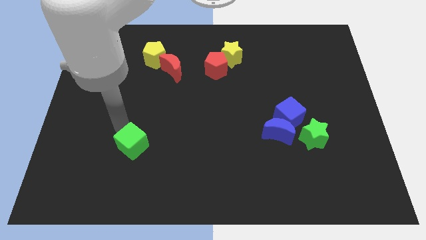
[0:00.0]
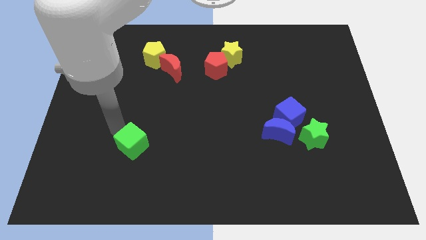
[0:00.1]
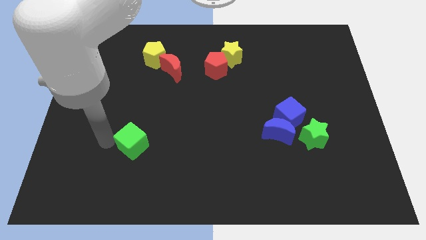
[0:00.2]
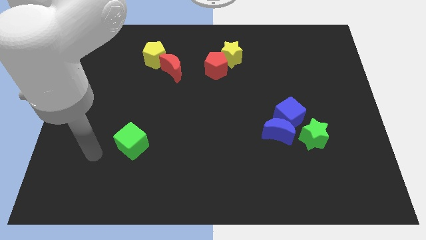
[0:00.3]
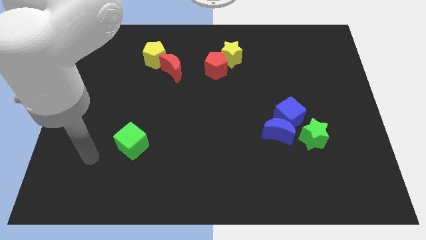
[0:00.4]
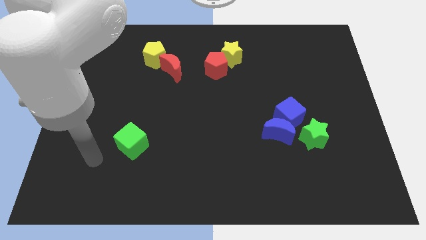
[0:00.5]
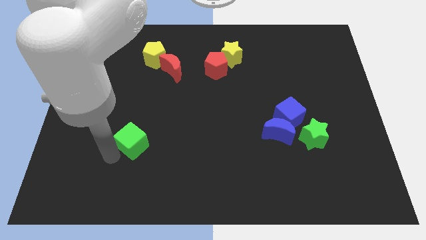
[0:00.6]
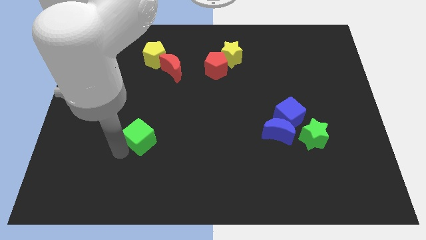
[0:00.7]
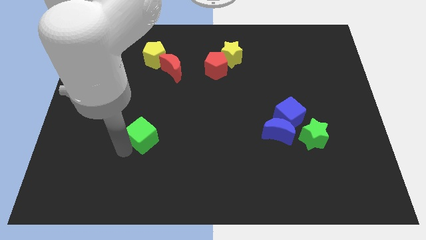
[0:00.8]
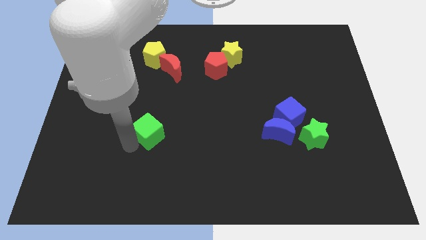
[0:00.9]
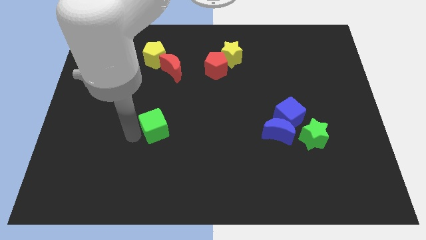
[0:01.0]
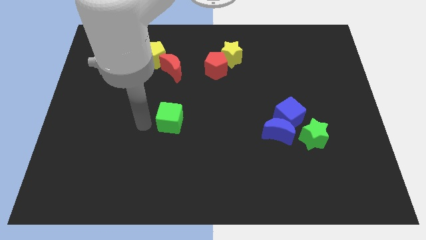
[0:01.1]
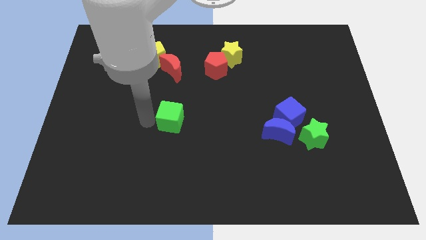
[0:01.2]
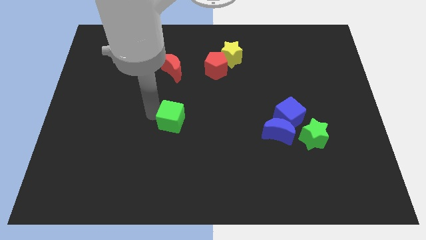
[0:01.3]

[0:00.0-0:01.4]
push the green cube towards the center of the board

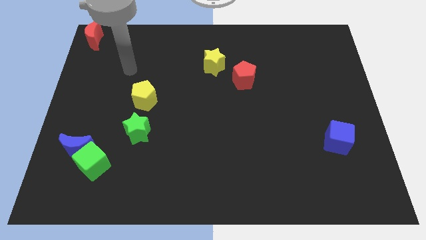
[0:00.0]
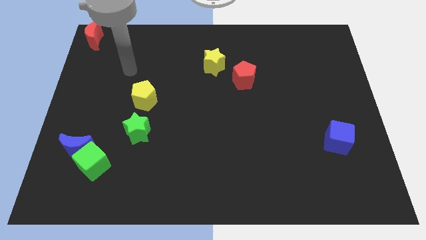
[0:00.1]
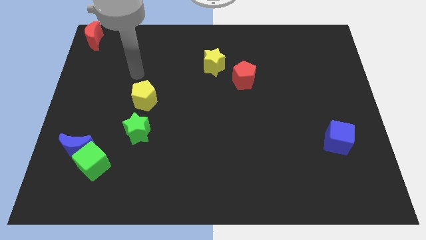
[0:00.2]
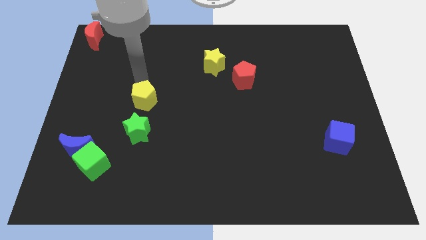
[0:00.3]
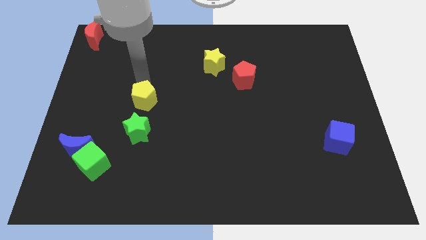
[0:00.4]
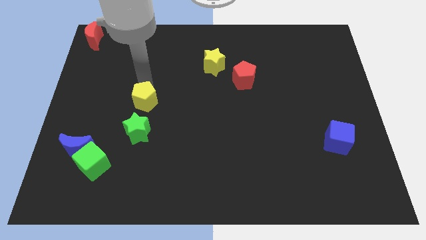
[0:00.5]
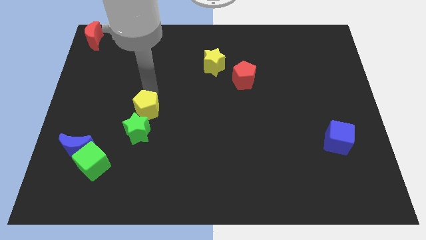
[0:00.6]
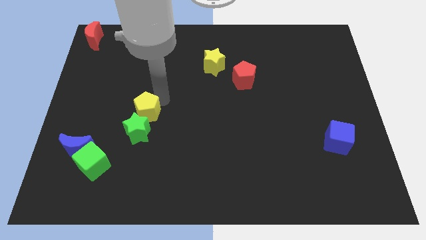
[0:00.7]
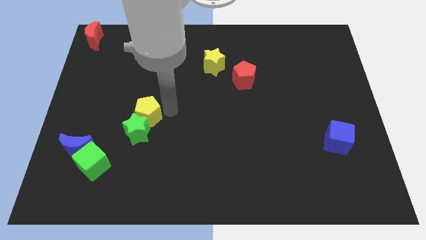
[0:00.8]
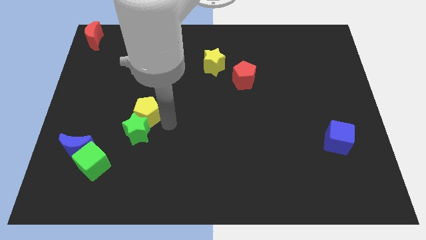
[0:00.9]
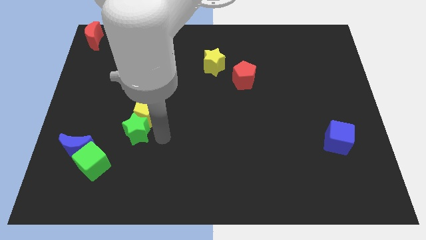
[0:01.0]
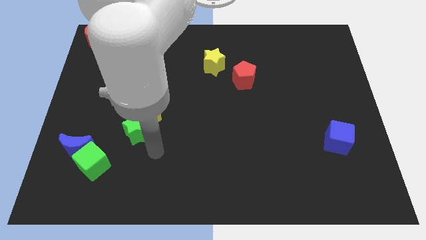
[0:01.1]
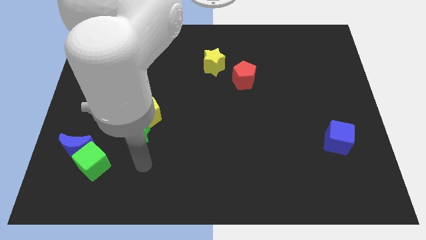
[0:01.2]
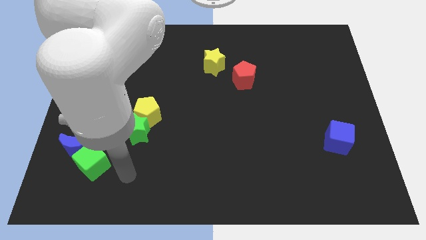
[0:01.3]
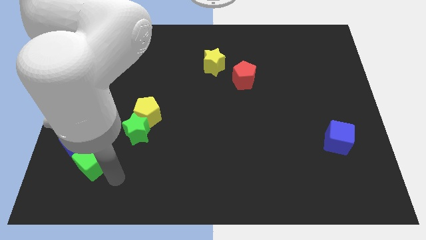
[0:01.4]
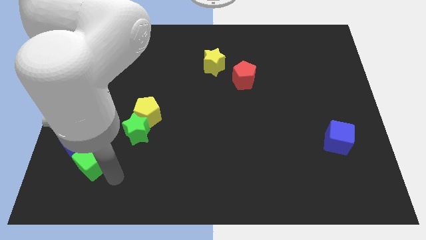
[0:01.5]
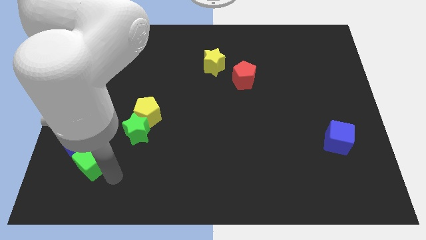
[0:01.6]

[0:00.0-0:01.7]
move the yellow pentagon close to green star

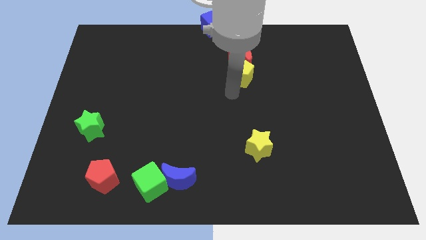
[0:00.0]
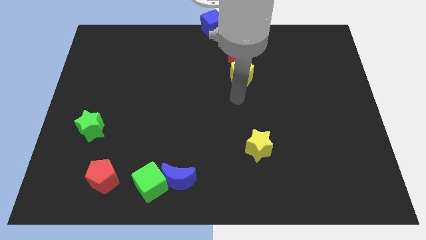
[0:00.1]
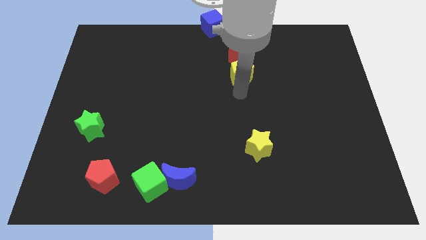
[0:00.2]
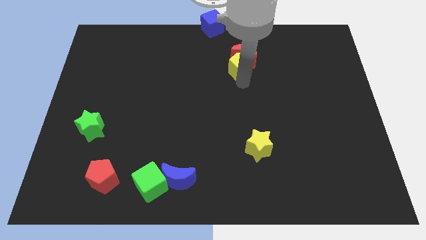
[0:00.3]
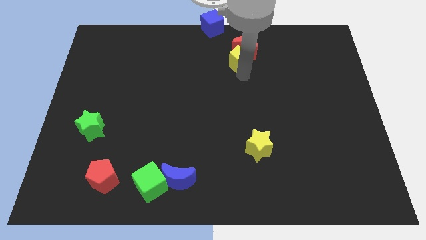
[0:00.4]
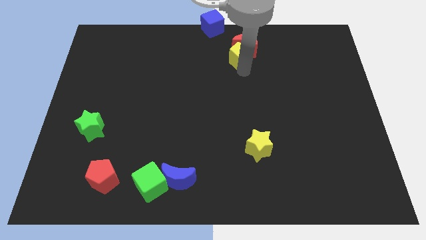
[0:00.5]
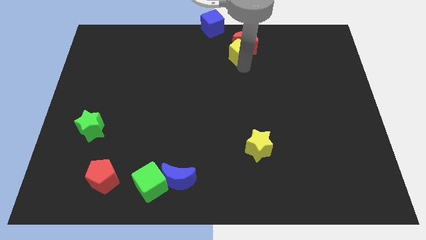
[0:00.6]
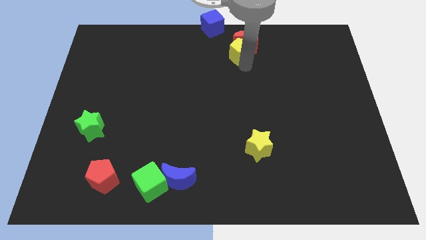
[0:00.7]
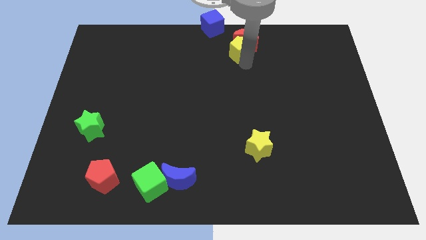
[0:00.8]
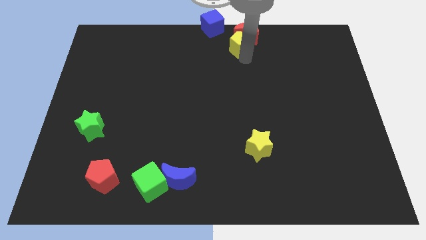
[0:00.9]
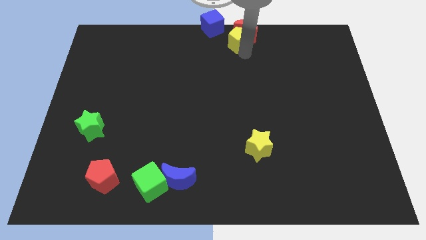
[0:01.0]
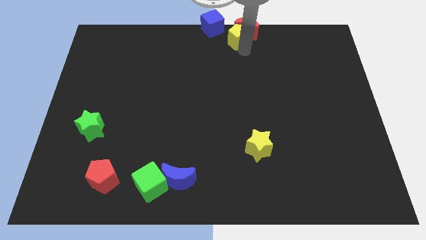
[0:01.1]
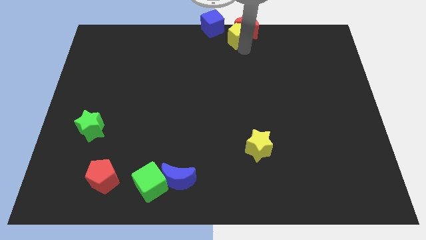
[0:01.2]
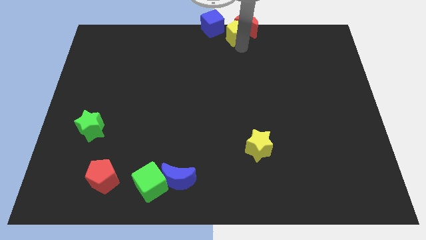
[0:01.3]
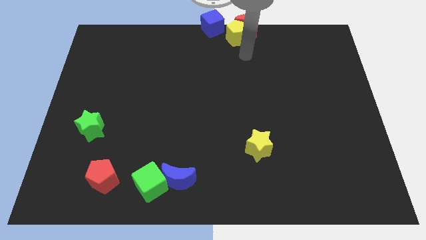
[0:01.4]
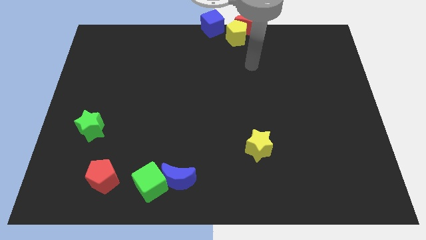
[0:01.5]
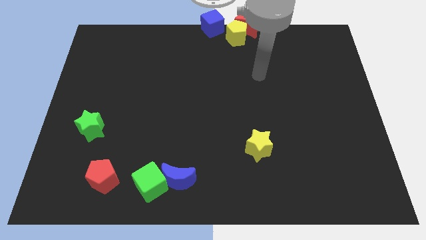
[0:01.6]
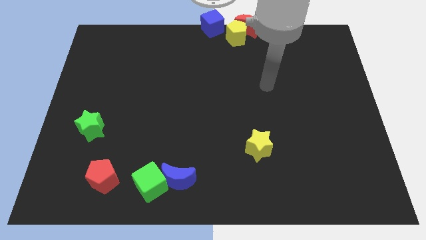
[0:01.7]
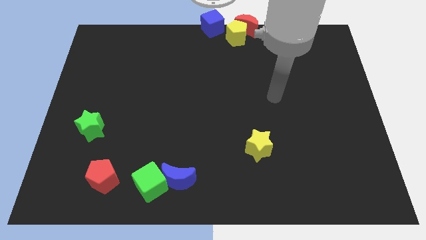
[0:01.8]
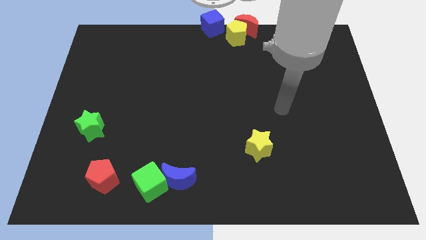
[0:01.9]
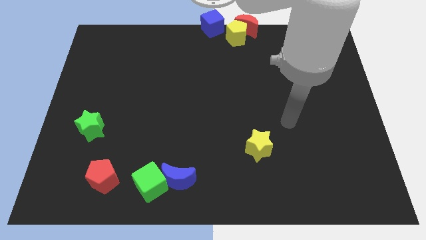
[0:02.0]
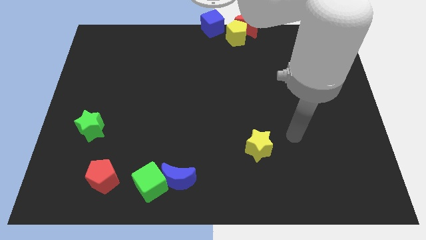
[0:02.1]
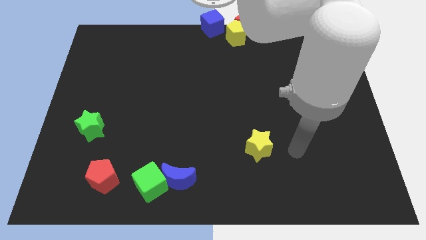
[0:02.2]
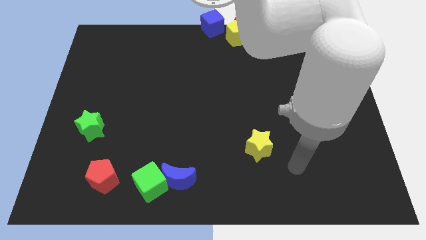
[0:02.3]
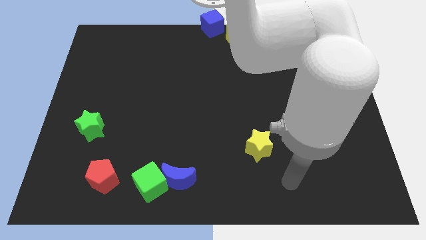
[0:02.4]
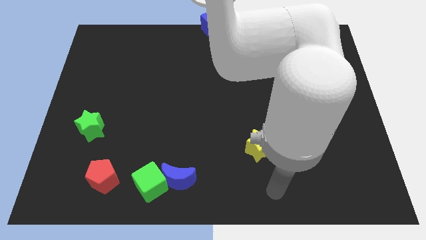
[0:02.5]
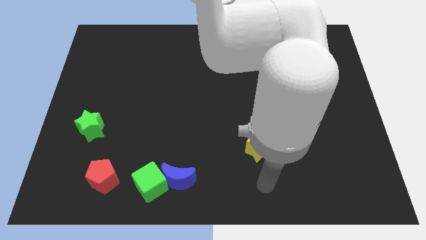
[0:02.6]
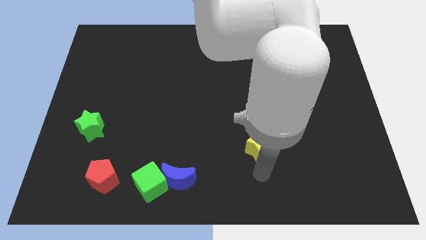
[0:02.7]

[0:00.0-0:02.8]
place the arm down to the yellow star

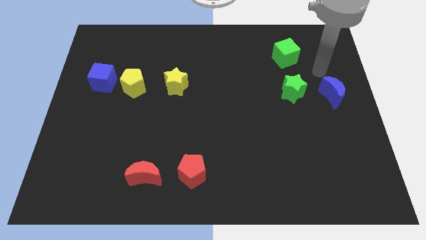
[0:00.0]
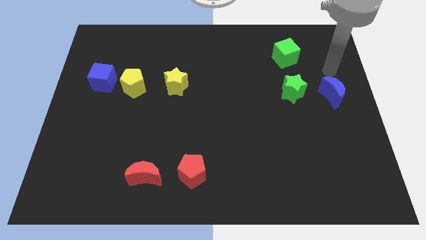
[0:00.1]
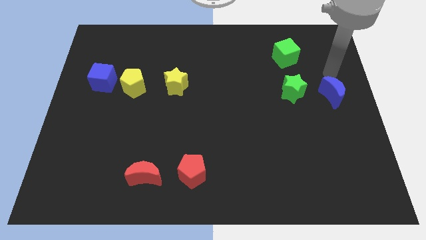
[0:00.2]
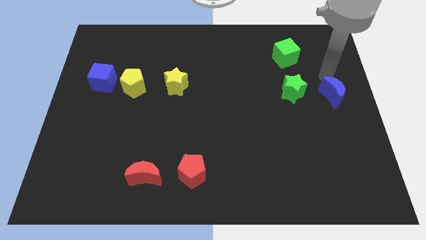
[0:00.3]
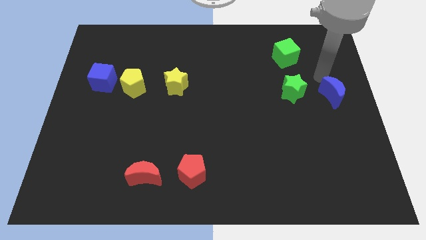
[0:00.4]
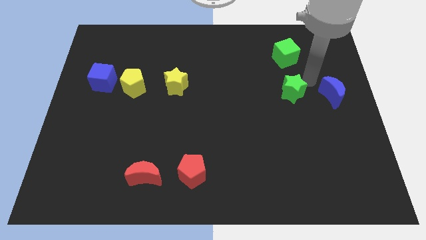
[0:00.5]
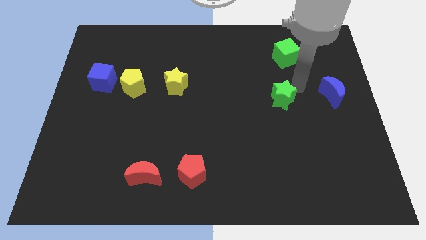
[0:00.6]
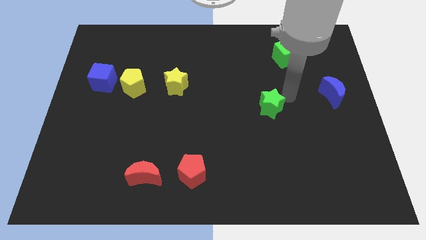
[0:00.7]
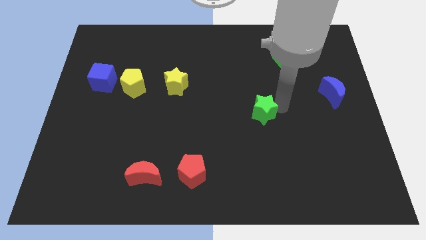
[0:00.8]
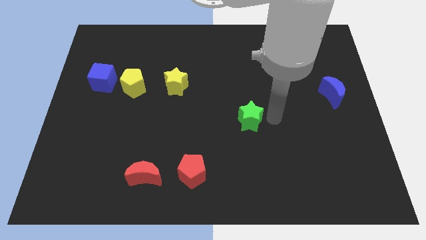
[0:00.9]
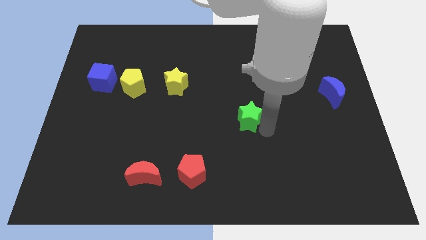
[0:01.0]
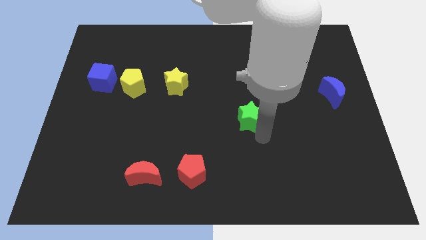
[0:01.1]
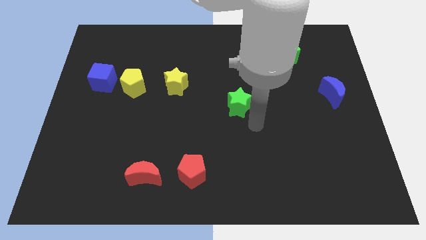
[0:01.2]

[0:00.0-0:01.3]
slide green star to the center of the board

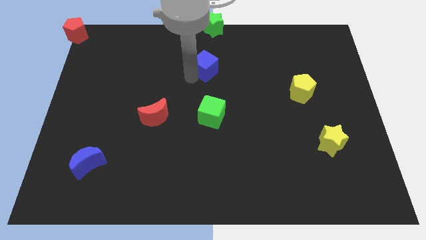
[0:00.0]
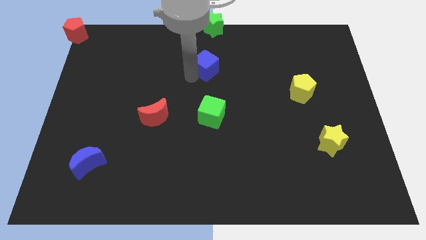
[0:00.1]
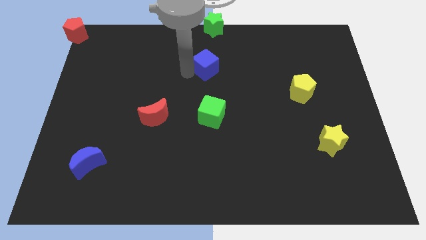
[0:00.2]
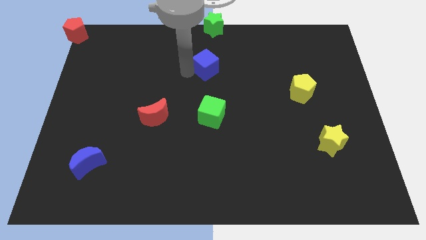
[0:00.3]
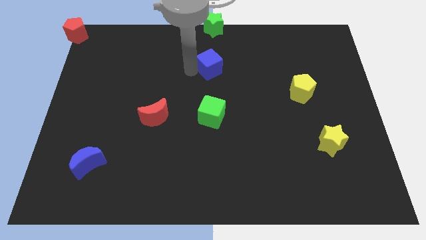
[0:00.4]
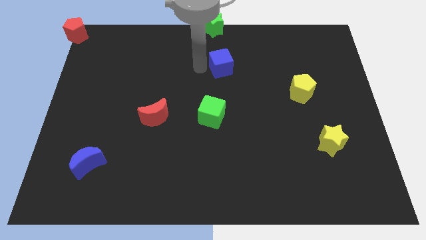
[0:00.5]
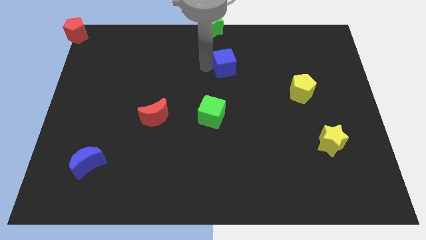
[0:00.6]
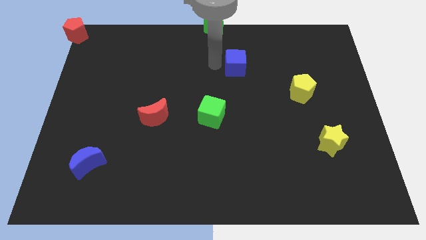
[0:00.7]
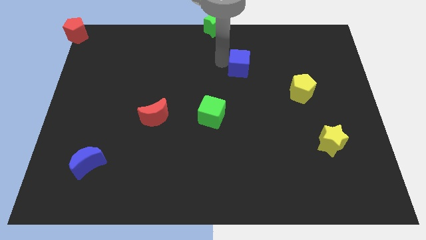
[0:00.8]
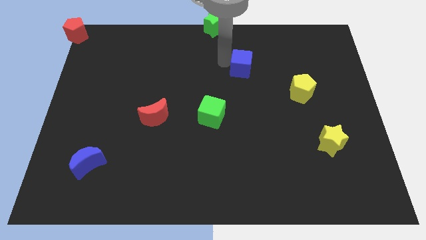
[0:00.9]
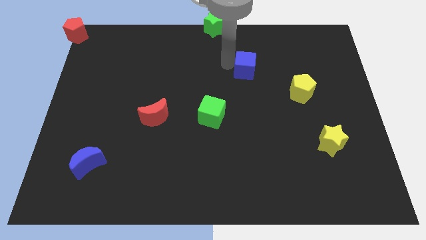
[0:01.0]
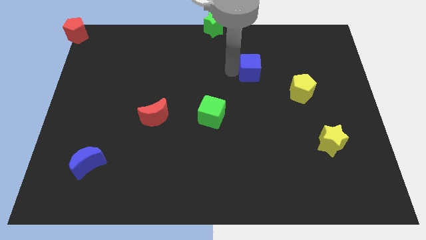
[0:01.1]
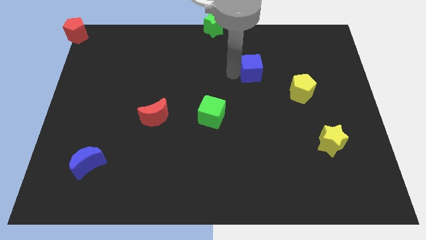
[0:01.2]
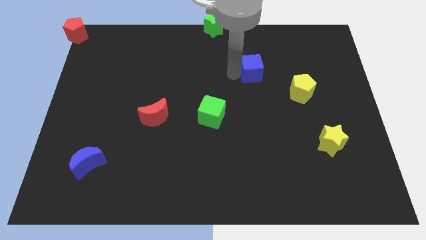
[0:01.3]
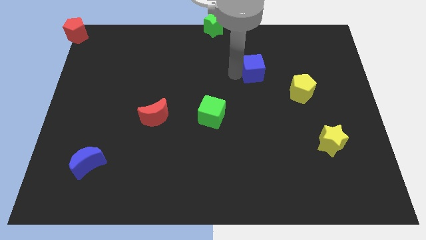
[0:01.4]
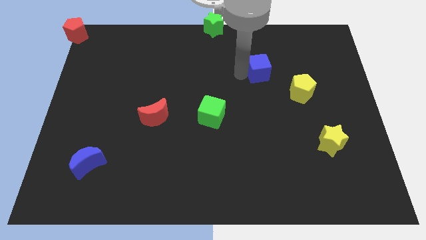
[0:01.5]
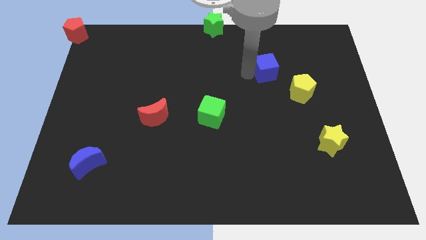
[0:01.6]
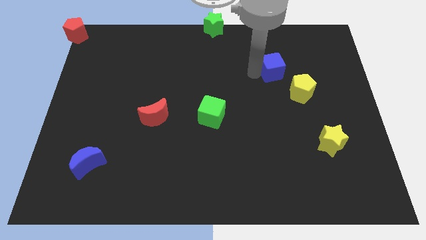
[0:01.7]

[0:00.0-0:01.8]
move the blue cube towards the yellow pentagon
